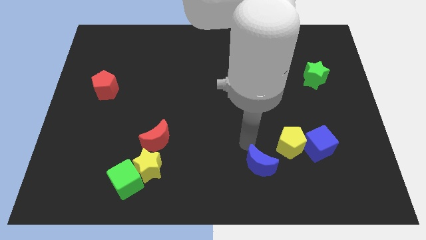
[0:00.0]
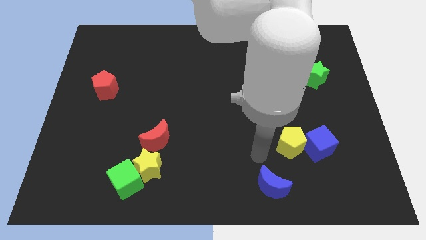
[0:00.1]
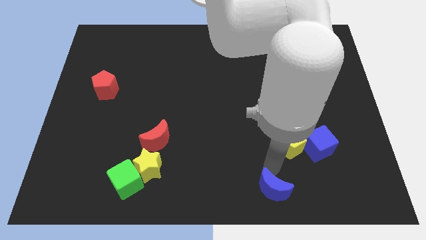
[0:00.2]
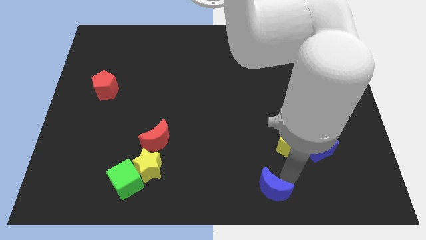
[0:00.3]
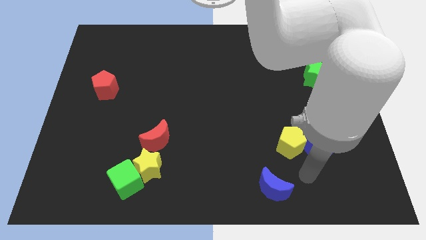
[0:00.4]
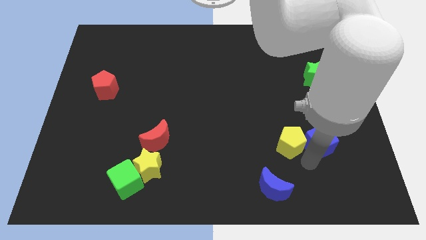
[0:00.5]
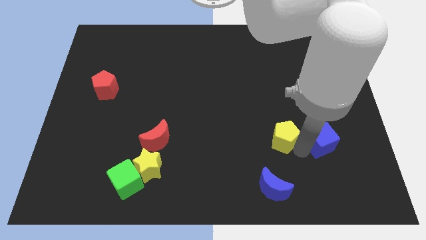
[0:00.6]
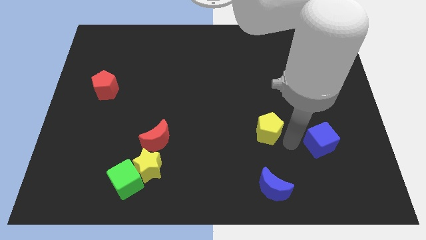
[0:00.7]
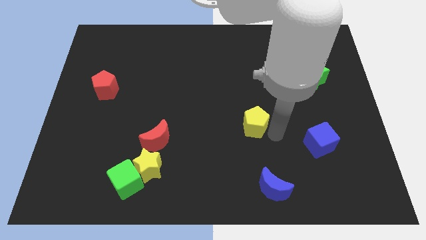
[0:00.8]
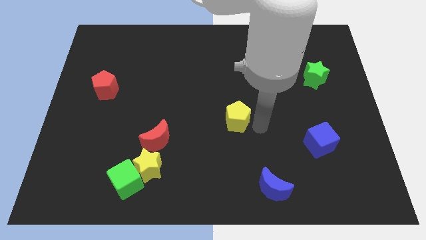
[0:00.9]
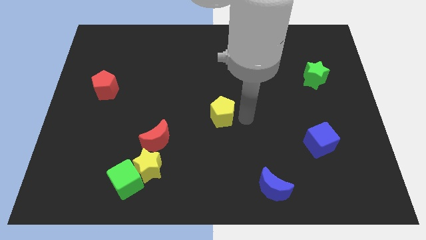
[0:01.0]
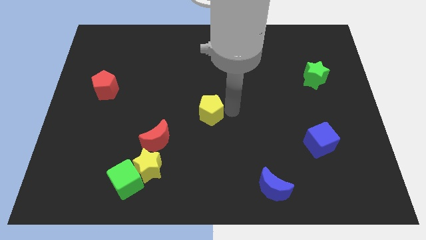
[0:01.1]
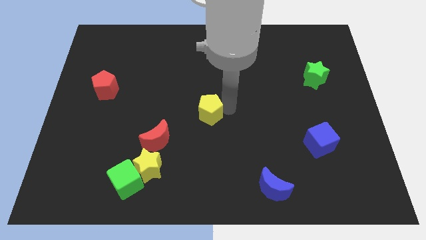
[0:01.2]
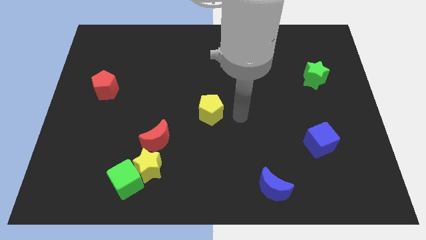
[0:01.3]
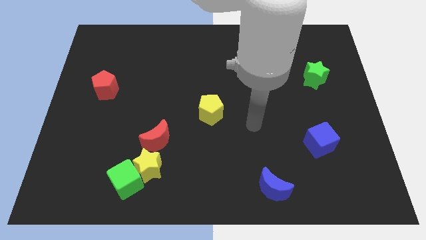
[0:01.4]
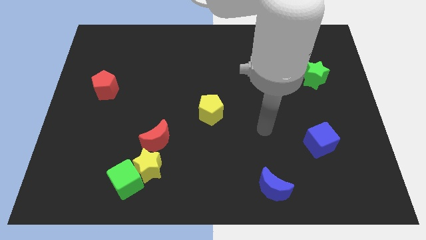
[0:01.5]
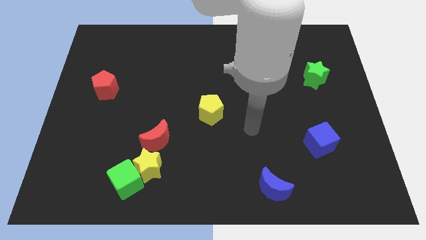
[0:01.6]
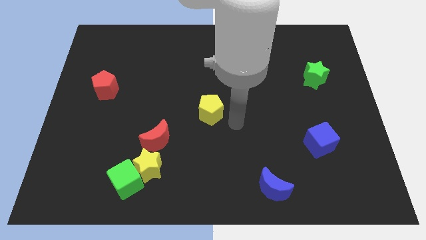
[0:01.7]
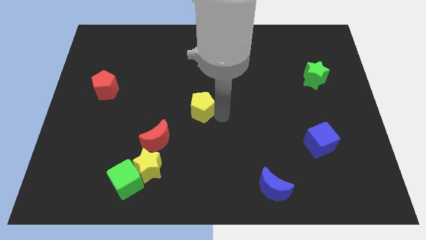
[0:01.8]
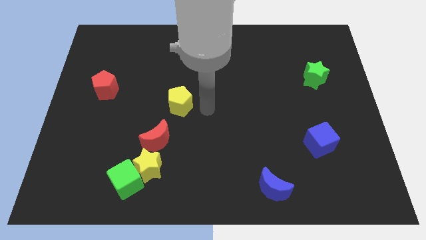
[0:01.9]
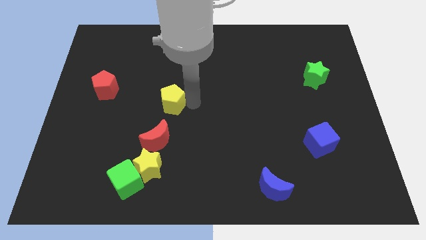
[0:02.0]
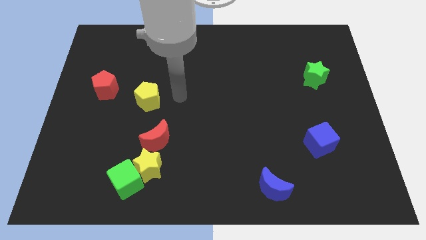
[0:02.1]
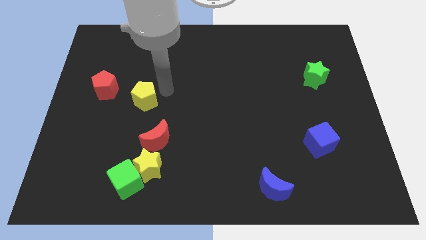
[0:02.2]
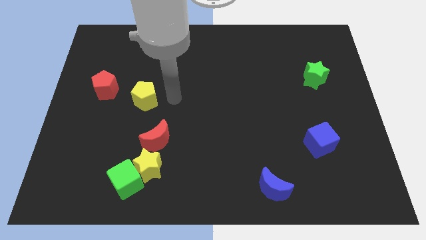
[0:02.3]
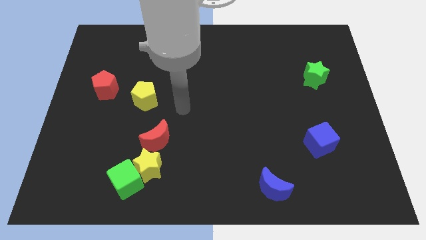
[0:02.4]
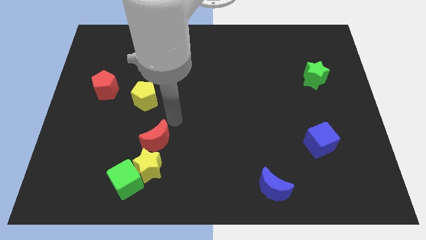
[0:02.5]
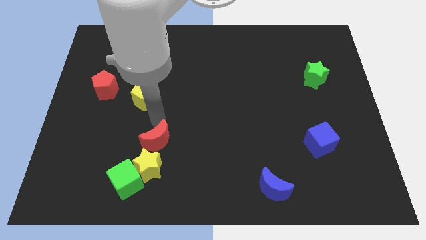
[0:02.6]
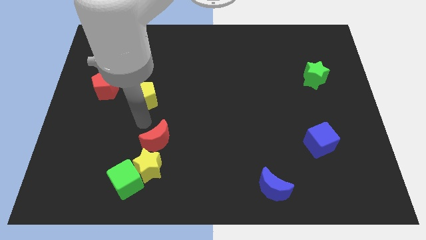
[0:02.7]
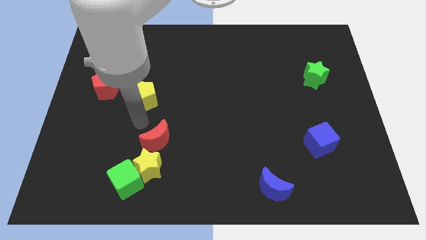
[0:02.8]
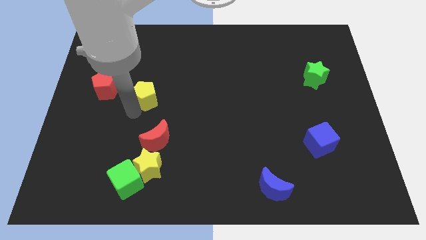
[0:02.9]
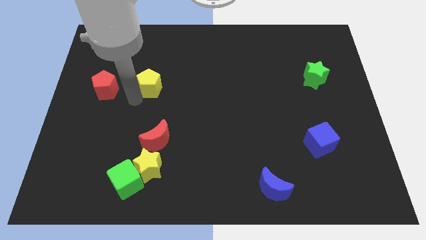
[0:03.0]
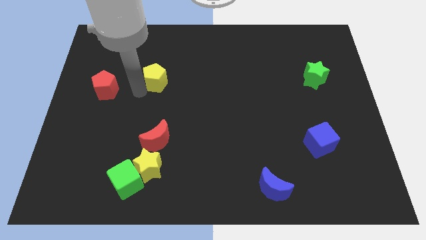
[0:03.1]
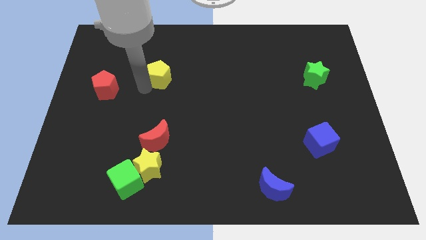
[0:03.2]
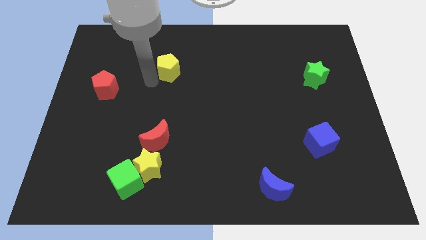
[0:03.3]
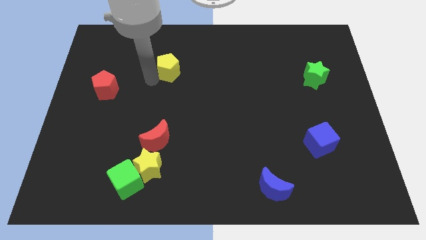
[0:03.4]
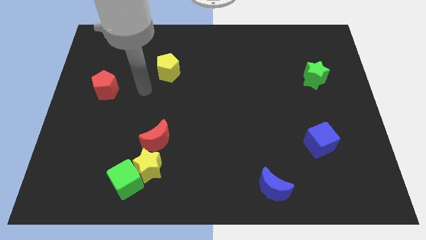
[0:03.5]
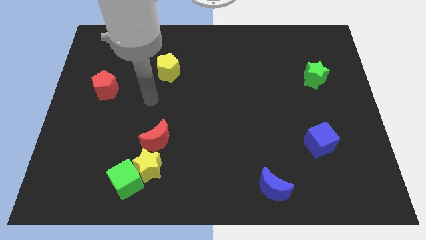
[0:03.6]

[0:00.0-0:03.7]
push the yellow pentagon towards top left

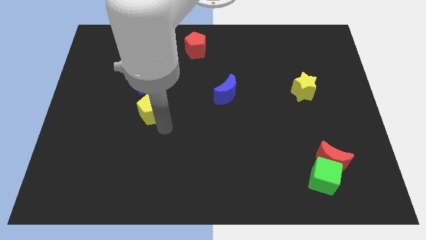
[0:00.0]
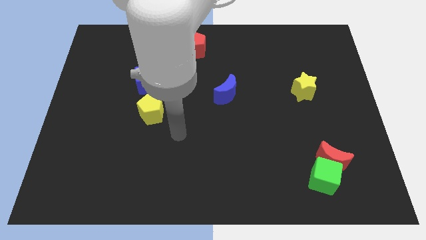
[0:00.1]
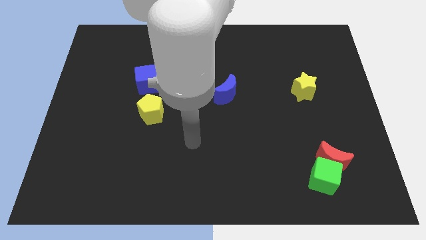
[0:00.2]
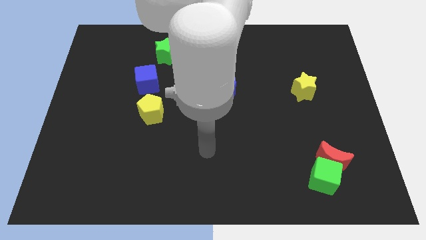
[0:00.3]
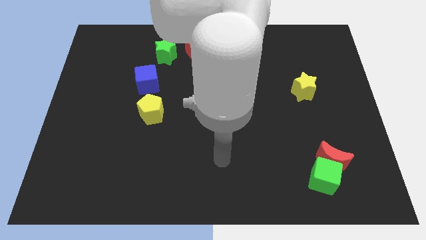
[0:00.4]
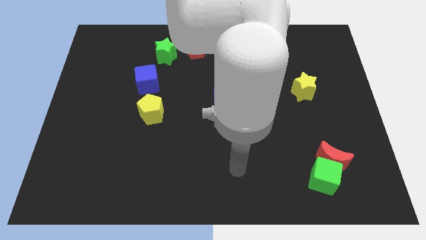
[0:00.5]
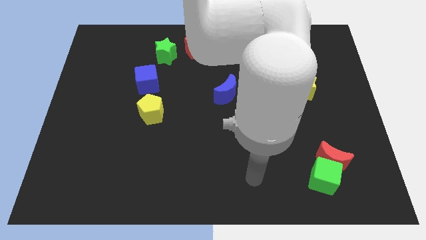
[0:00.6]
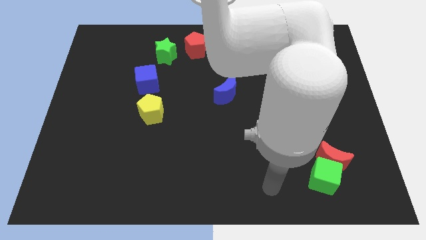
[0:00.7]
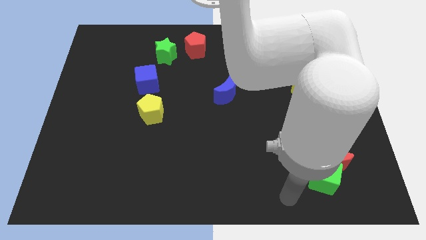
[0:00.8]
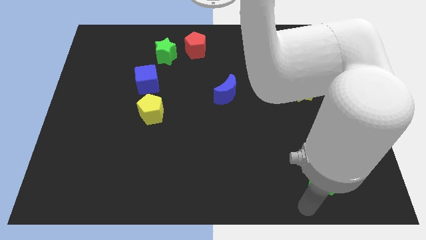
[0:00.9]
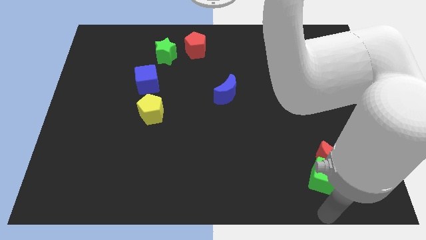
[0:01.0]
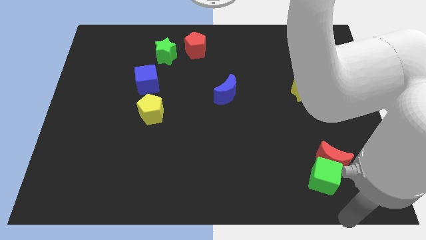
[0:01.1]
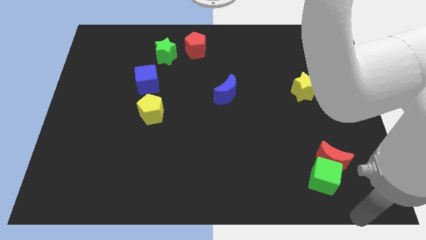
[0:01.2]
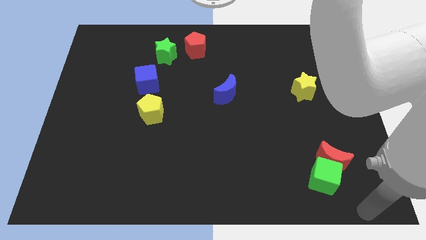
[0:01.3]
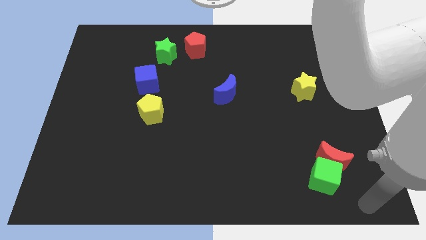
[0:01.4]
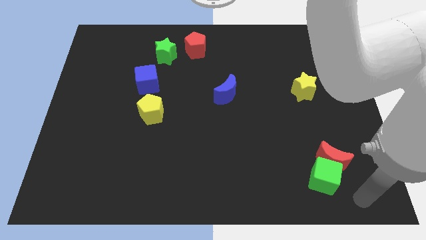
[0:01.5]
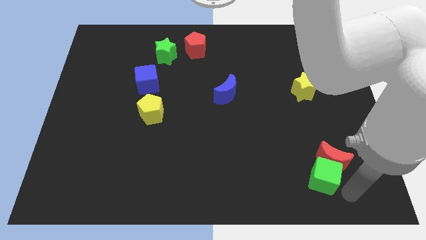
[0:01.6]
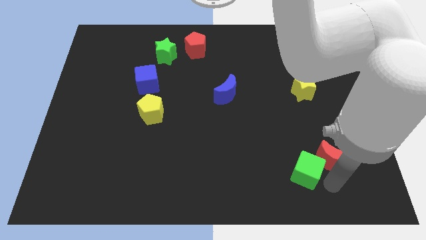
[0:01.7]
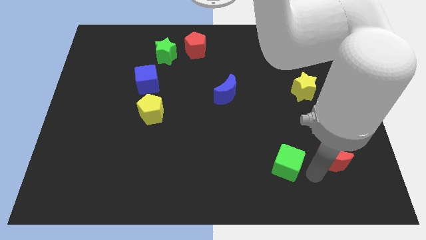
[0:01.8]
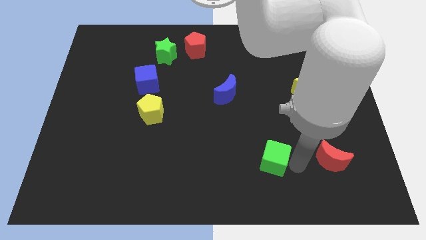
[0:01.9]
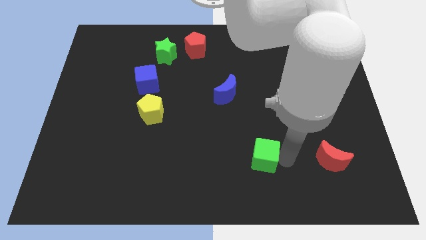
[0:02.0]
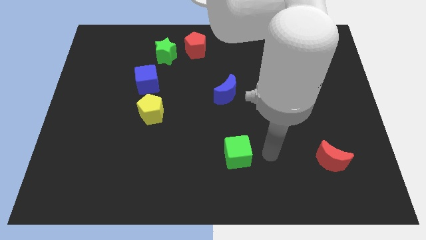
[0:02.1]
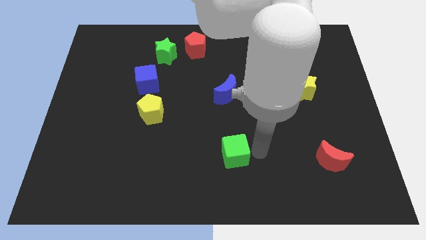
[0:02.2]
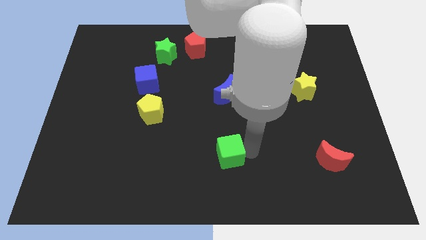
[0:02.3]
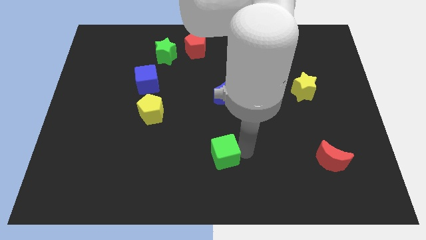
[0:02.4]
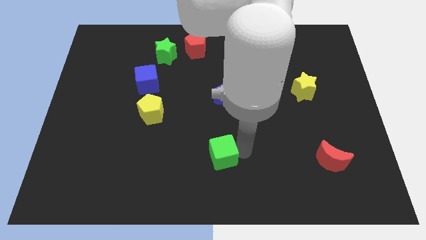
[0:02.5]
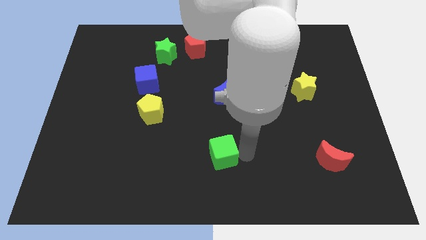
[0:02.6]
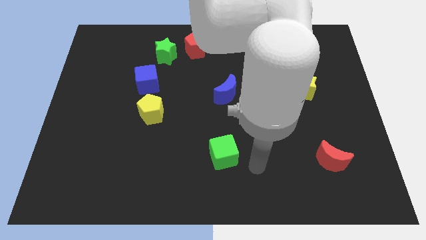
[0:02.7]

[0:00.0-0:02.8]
push green cube vertically below blue moon

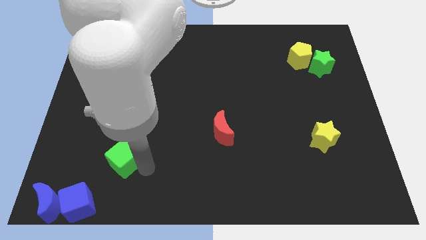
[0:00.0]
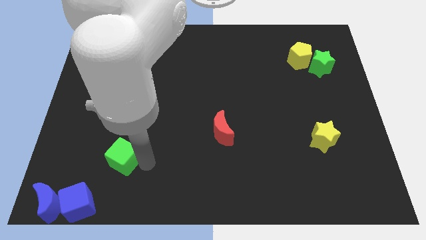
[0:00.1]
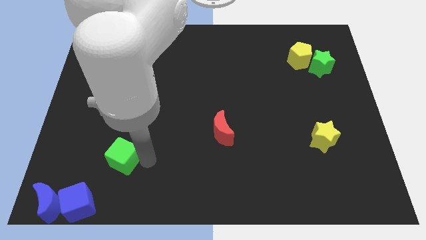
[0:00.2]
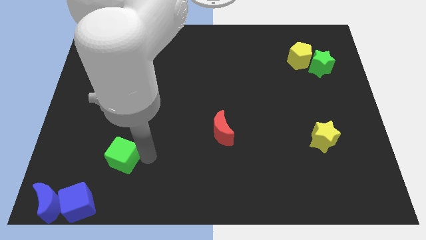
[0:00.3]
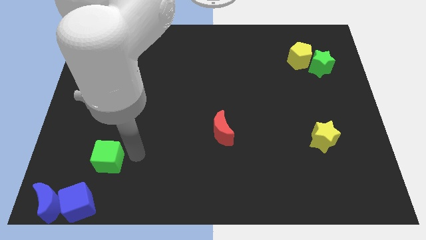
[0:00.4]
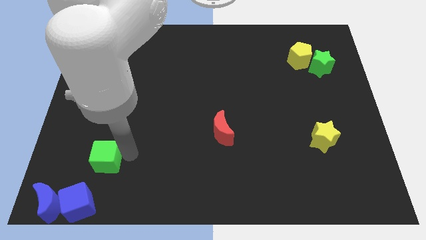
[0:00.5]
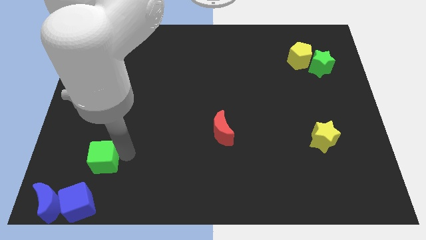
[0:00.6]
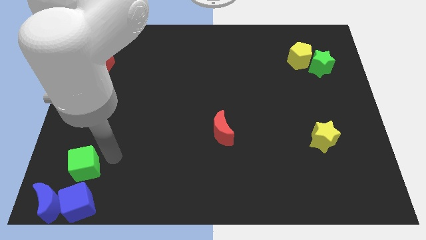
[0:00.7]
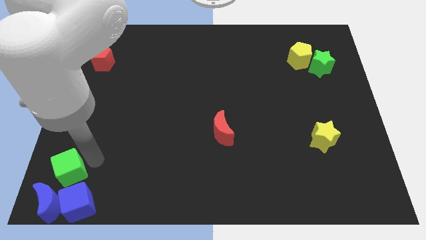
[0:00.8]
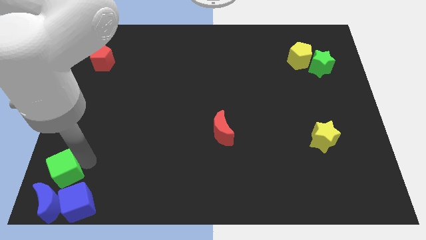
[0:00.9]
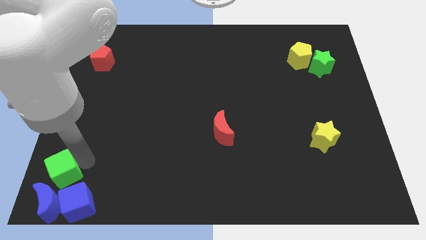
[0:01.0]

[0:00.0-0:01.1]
place green cube to the top of blue cube

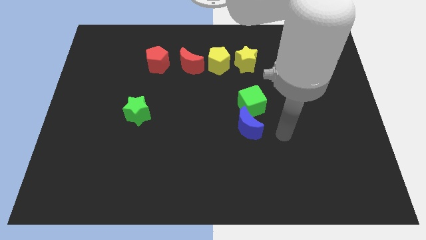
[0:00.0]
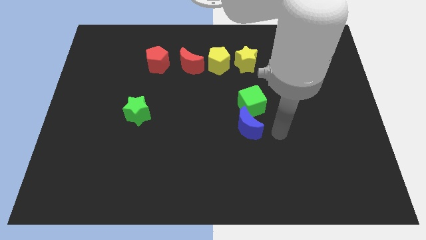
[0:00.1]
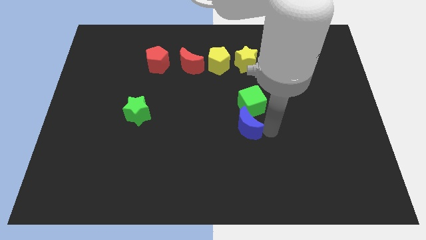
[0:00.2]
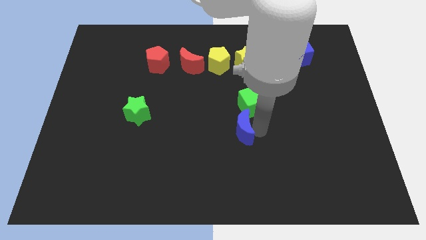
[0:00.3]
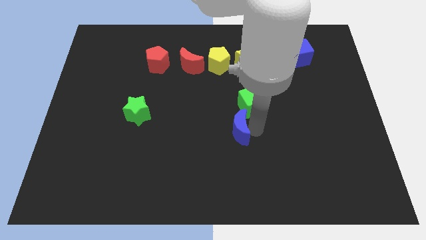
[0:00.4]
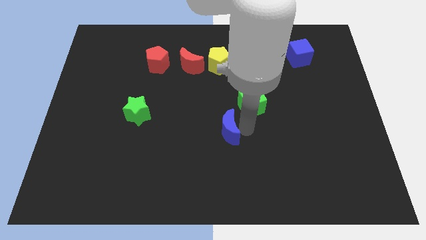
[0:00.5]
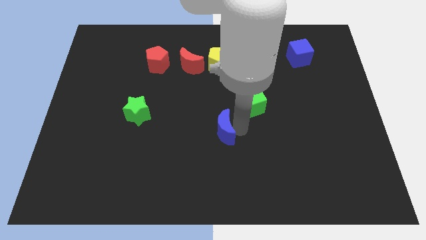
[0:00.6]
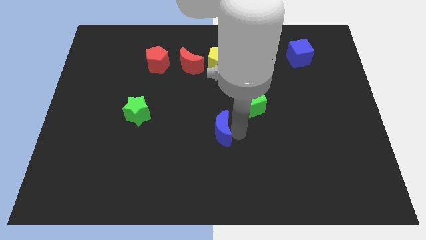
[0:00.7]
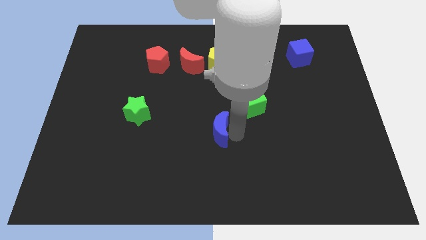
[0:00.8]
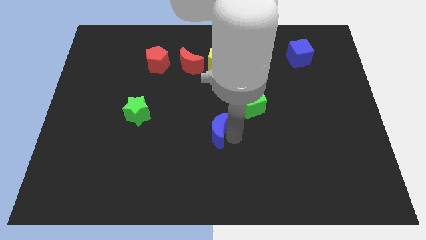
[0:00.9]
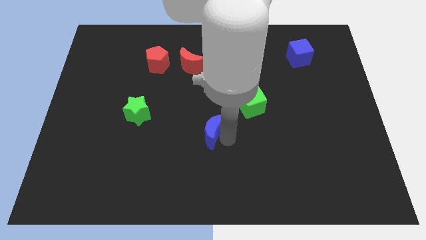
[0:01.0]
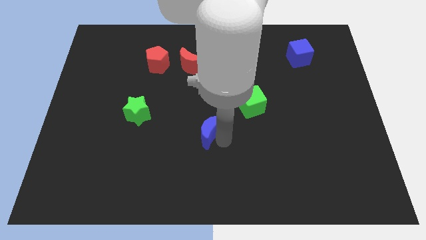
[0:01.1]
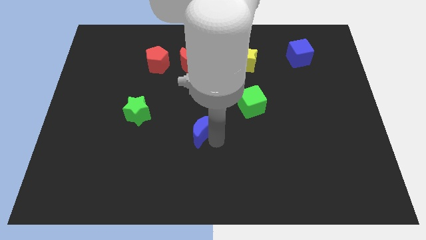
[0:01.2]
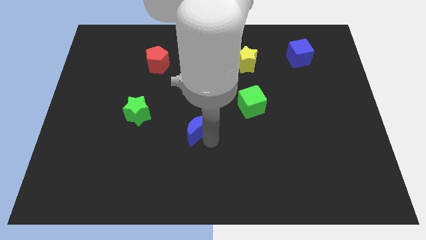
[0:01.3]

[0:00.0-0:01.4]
move the blue moon away from the green cube

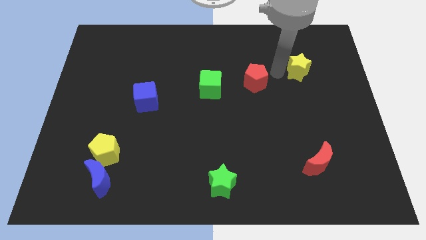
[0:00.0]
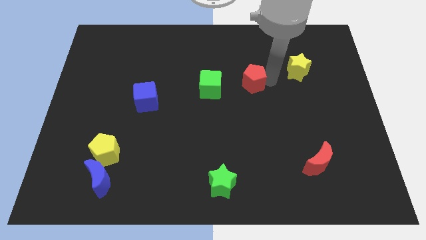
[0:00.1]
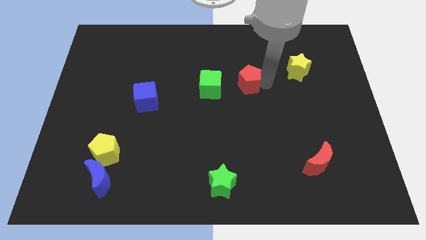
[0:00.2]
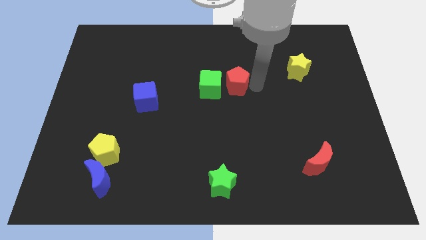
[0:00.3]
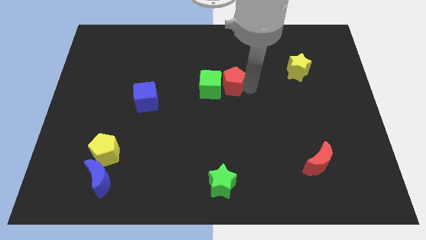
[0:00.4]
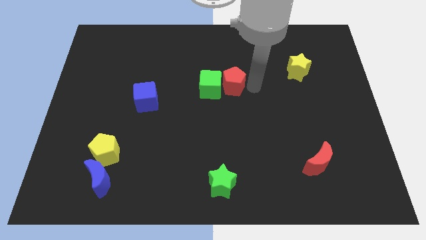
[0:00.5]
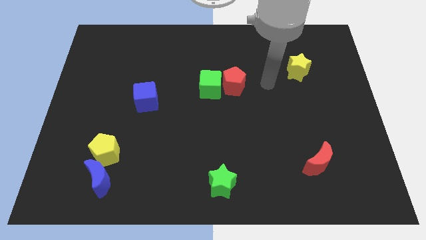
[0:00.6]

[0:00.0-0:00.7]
place the red pentagon to the right side of green cube
